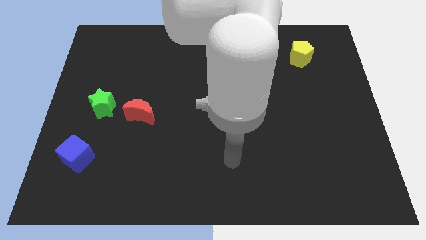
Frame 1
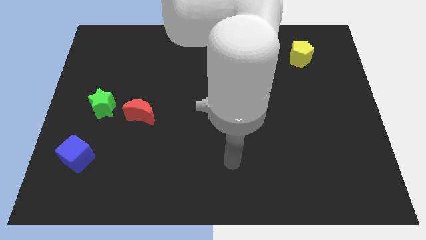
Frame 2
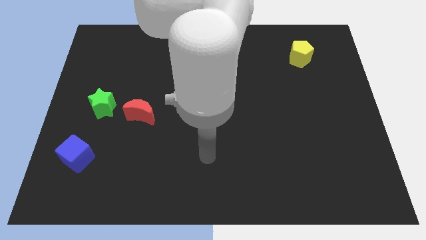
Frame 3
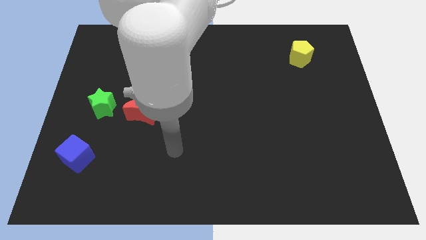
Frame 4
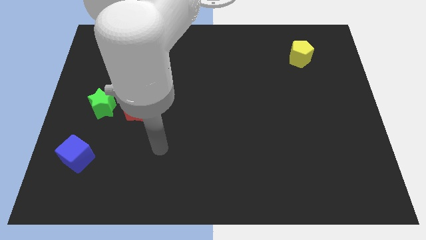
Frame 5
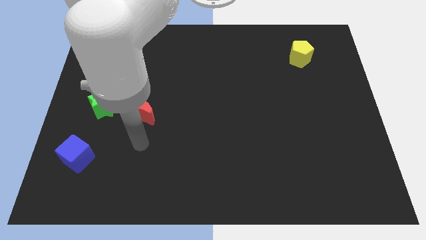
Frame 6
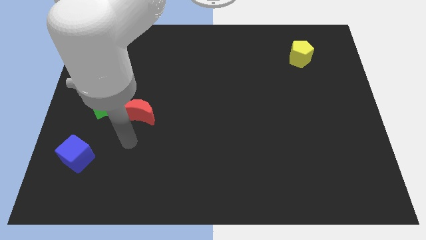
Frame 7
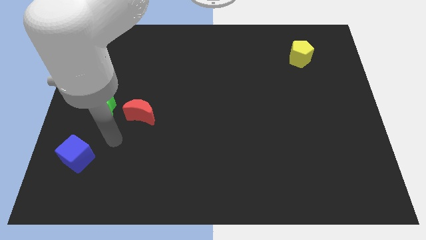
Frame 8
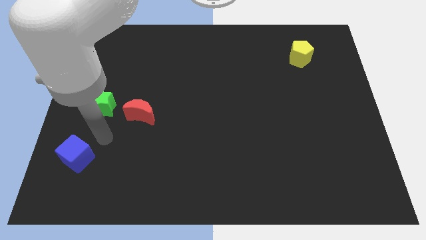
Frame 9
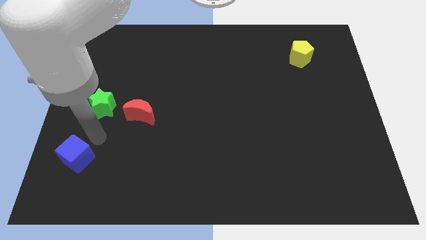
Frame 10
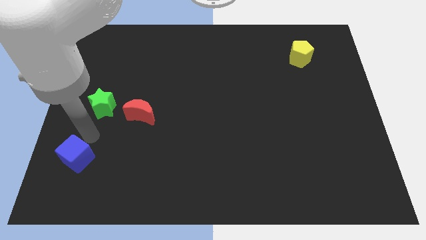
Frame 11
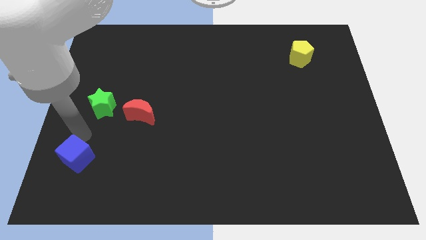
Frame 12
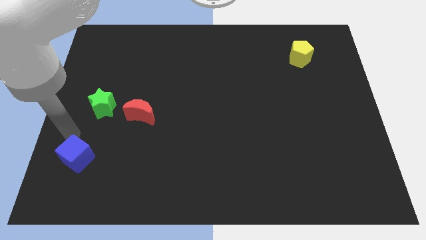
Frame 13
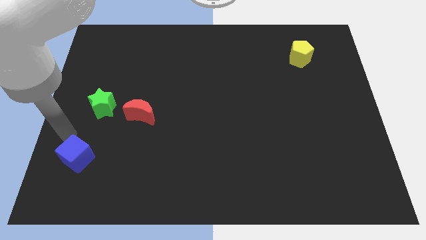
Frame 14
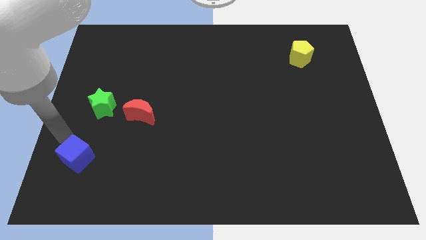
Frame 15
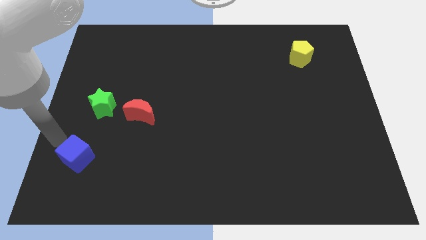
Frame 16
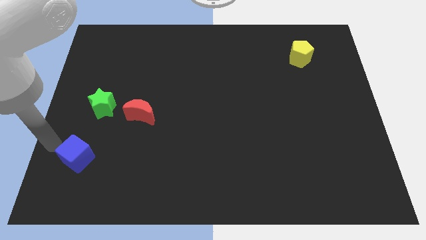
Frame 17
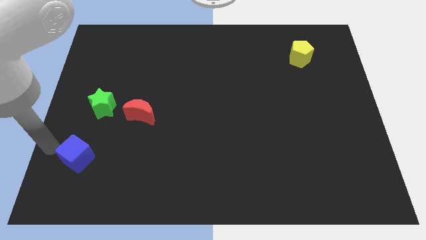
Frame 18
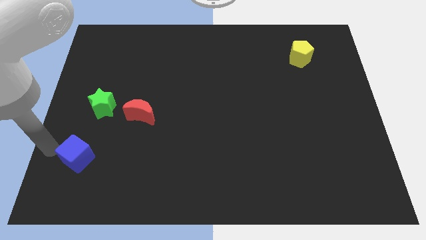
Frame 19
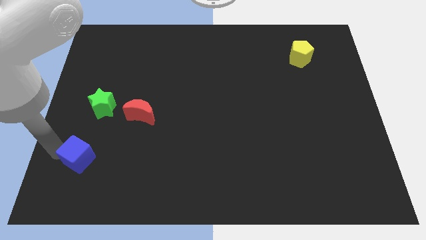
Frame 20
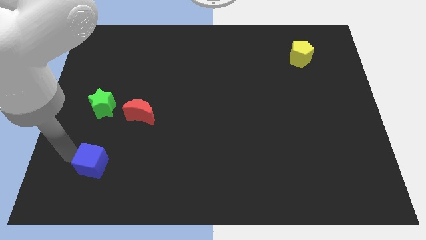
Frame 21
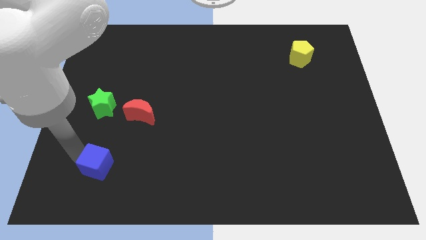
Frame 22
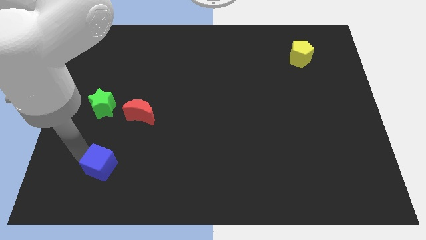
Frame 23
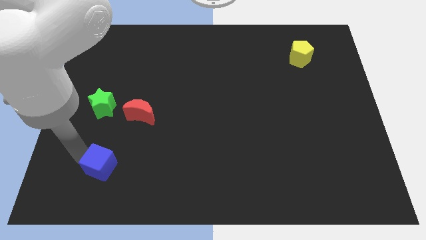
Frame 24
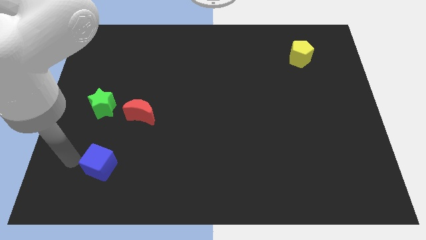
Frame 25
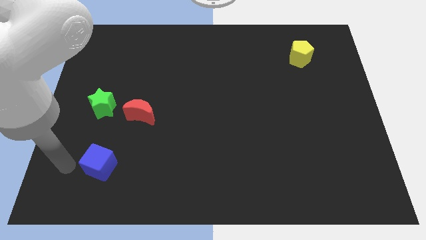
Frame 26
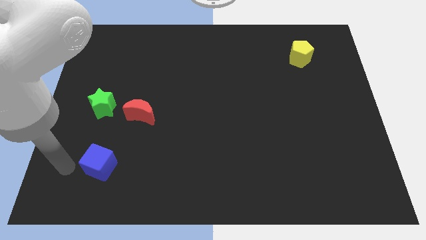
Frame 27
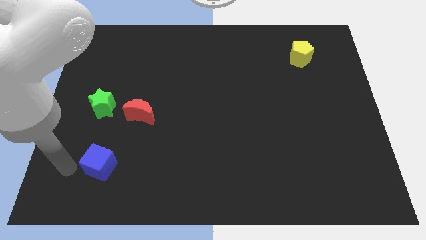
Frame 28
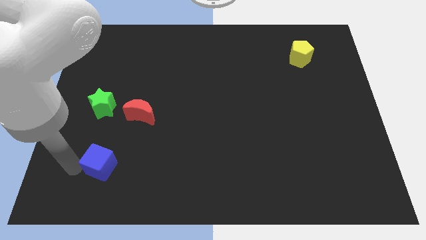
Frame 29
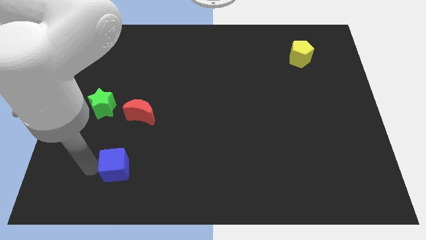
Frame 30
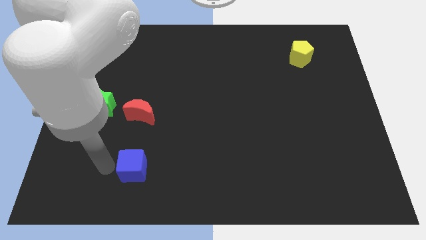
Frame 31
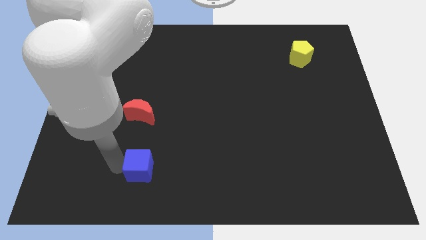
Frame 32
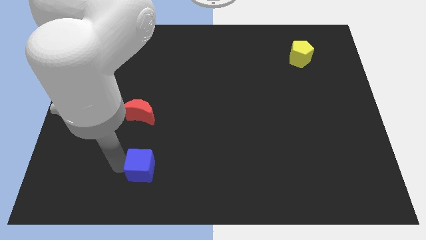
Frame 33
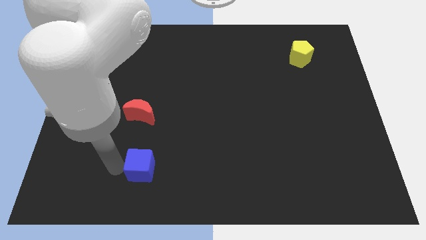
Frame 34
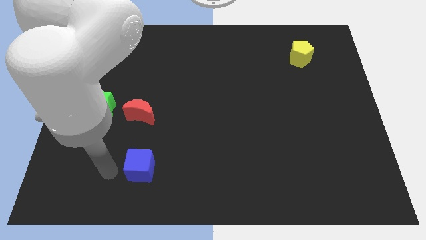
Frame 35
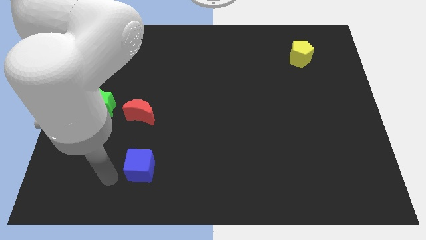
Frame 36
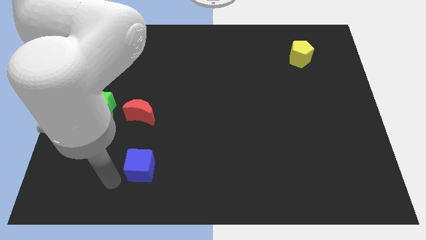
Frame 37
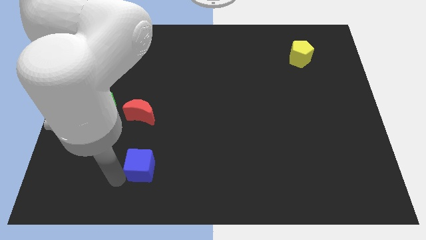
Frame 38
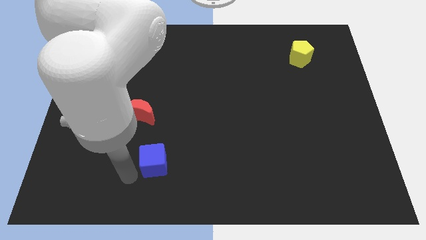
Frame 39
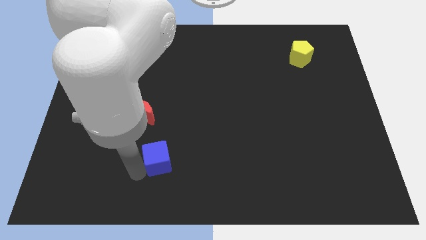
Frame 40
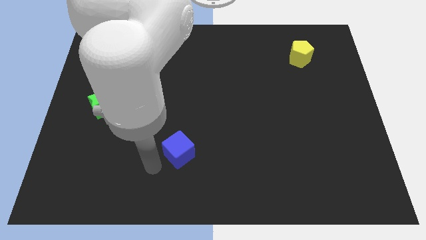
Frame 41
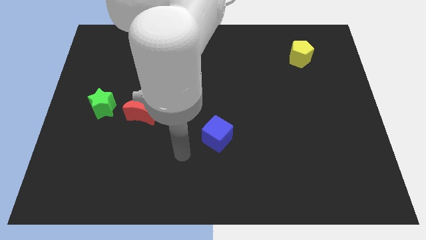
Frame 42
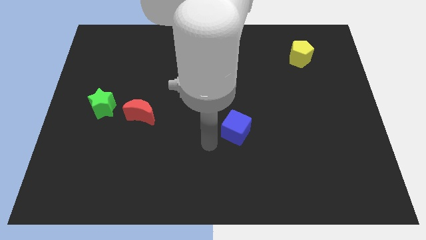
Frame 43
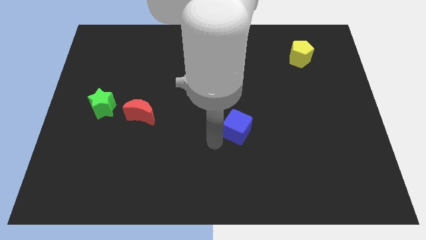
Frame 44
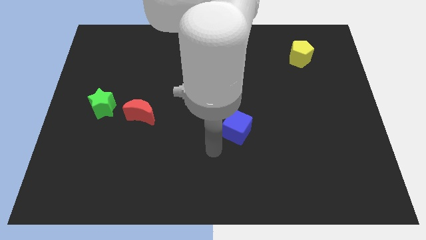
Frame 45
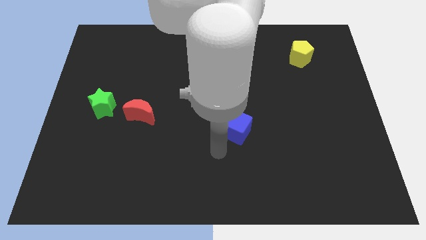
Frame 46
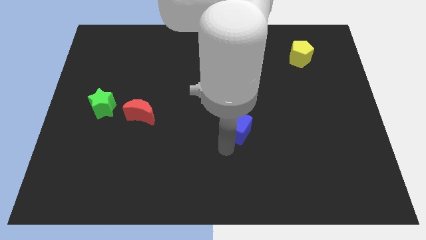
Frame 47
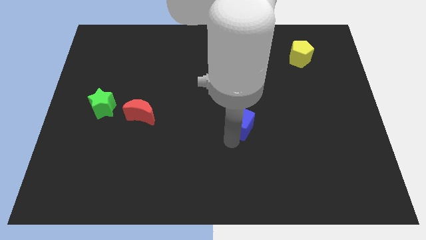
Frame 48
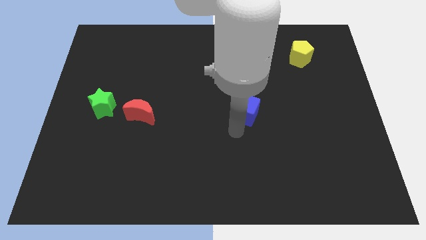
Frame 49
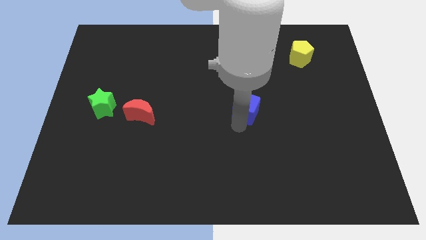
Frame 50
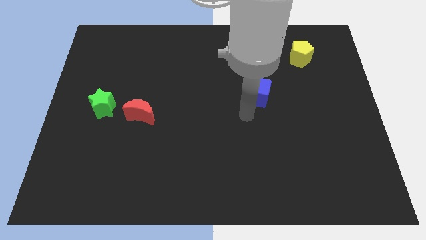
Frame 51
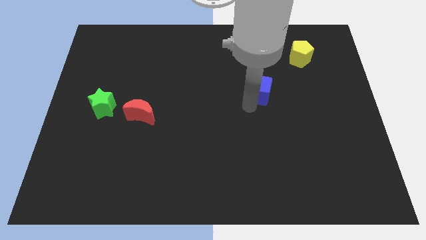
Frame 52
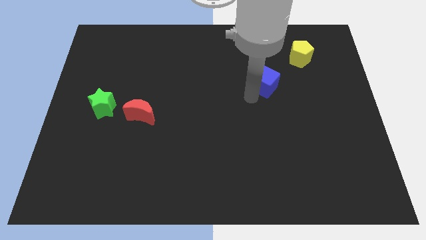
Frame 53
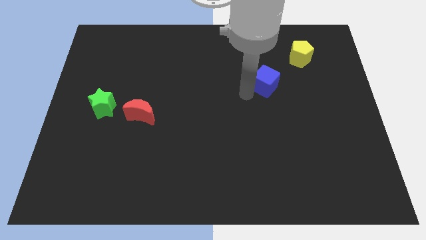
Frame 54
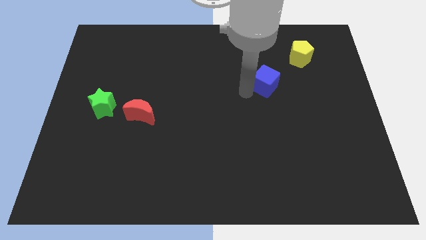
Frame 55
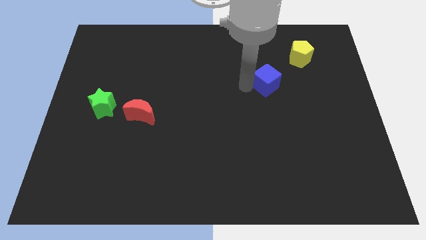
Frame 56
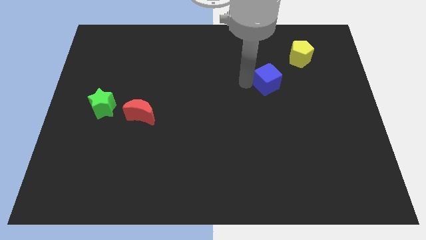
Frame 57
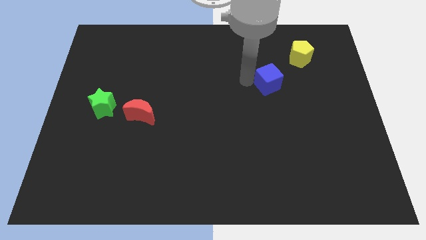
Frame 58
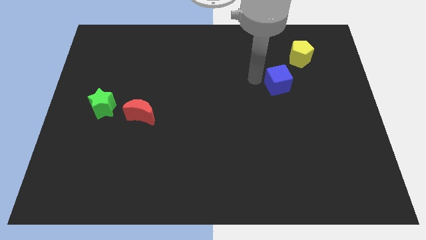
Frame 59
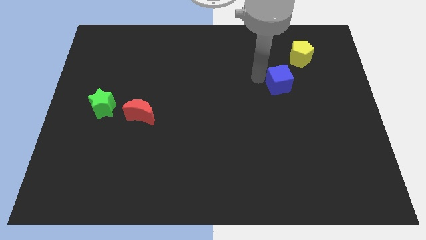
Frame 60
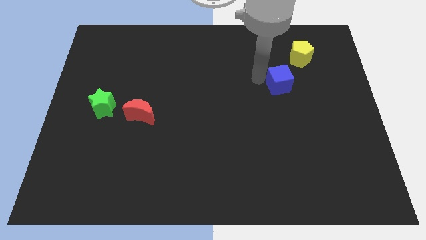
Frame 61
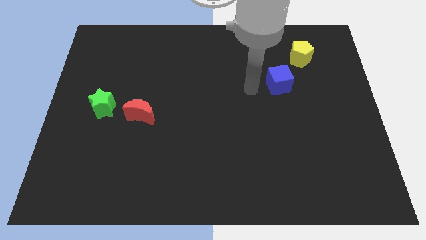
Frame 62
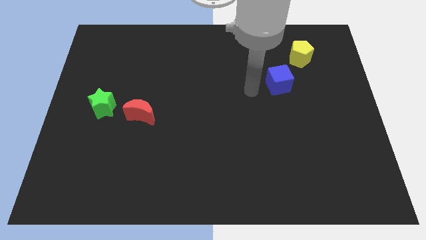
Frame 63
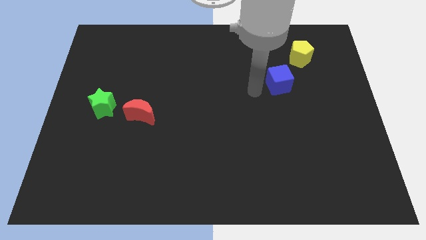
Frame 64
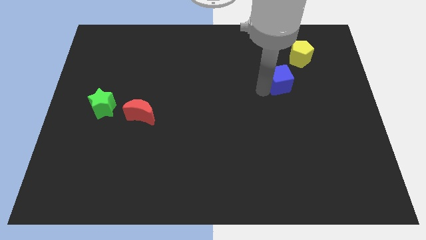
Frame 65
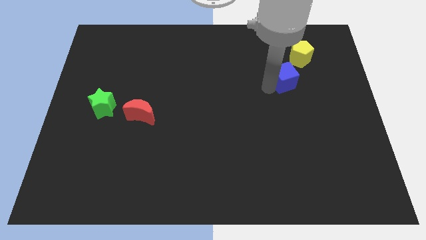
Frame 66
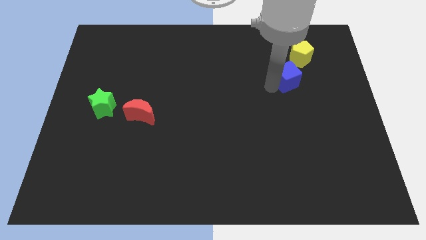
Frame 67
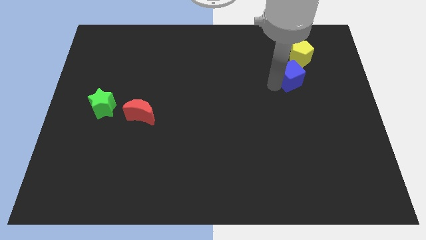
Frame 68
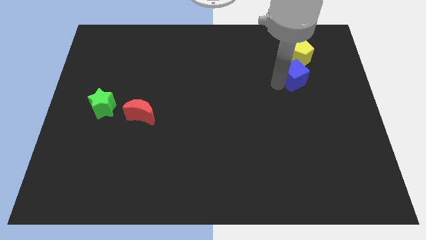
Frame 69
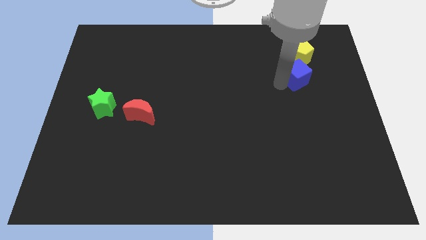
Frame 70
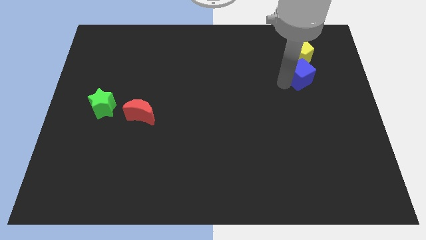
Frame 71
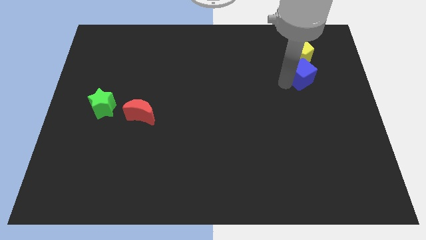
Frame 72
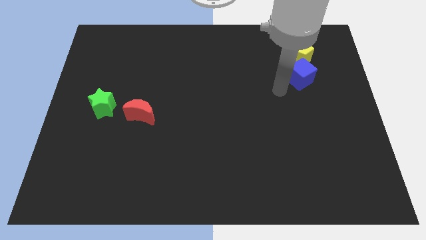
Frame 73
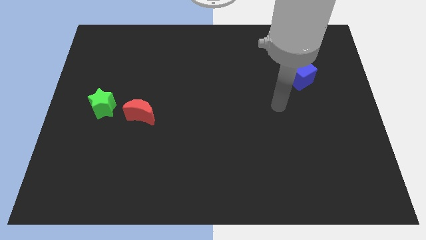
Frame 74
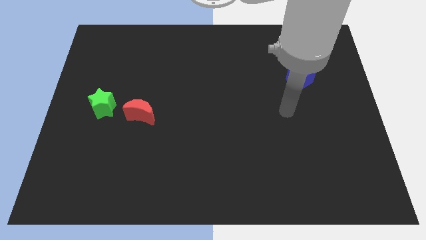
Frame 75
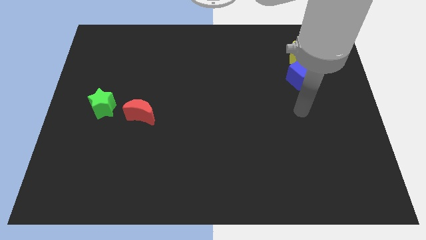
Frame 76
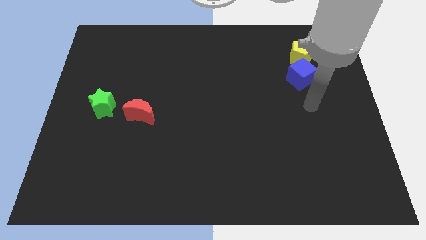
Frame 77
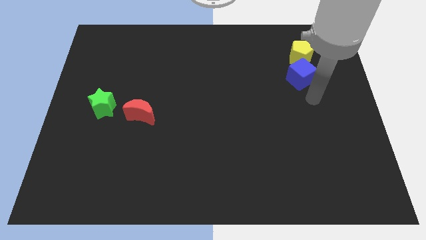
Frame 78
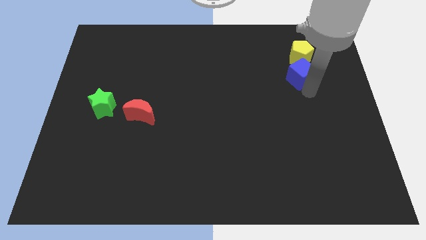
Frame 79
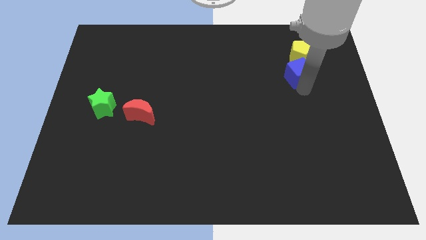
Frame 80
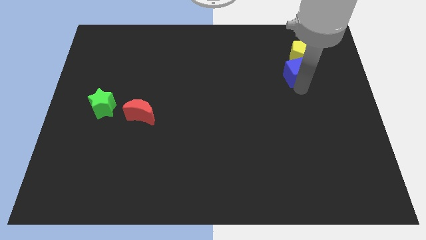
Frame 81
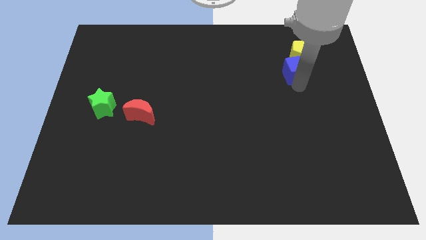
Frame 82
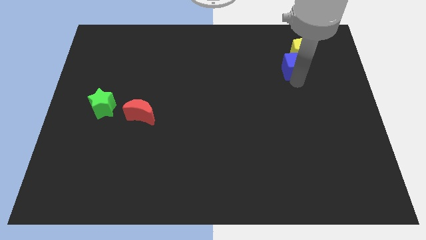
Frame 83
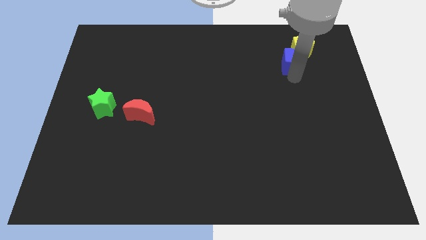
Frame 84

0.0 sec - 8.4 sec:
put the cube next to the yellow block

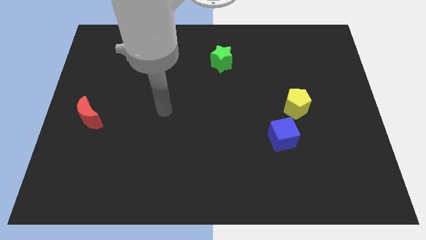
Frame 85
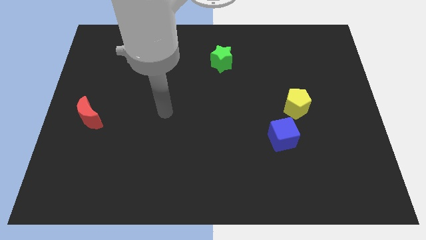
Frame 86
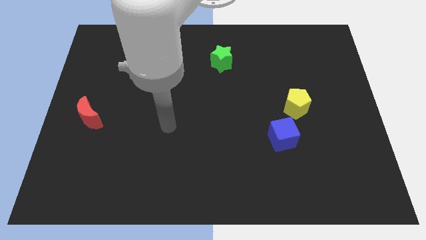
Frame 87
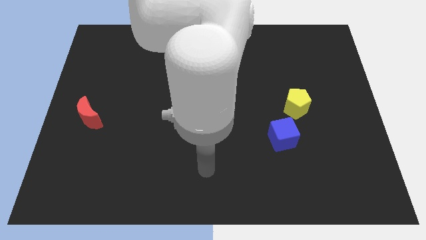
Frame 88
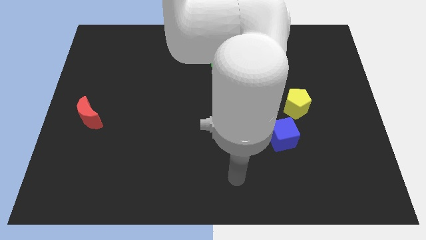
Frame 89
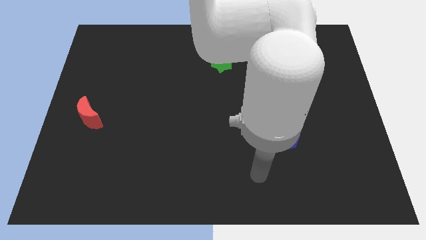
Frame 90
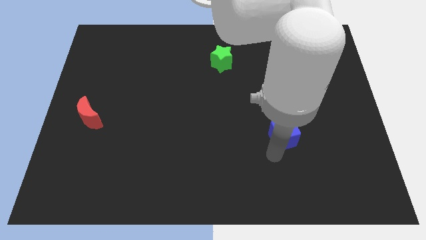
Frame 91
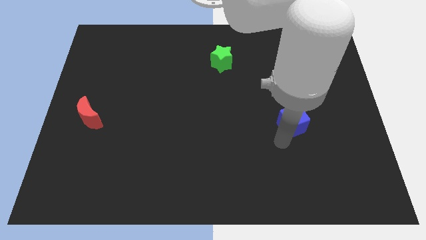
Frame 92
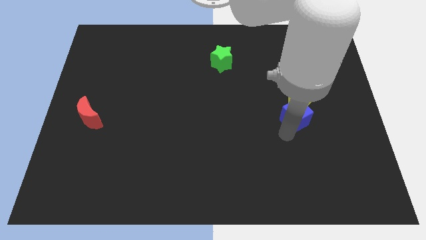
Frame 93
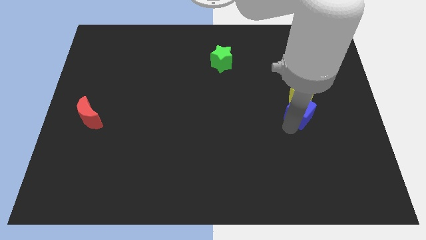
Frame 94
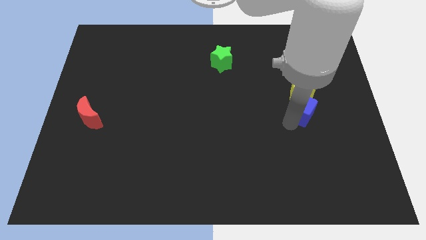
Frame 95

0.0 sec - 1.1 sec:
move the cube towards the yellow block
